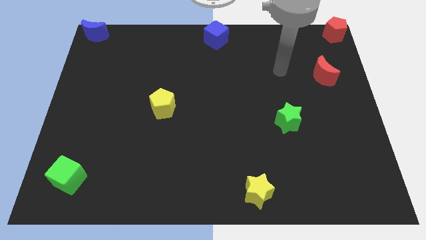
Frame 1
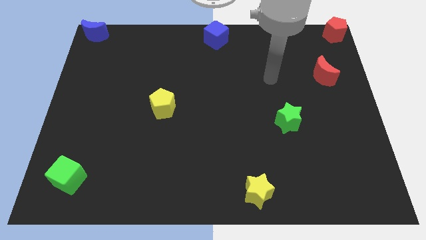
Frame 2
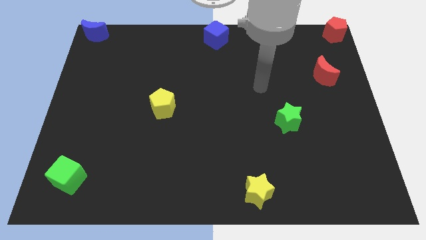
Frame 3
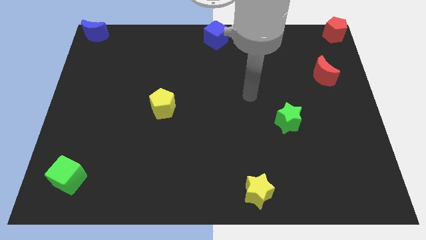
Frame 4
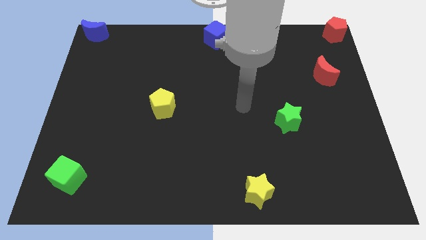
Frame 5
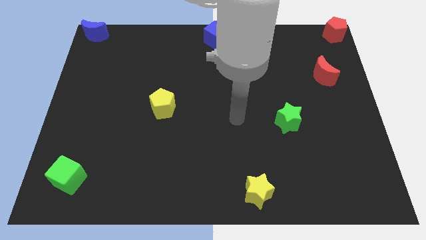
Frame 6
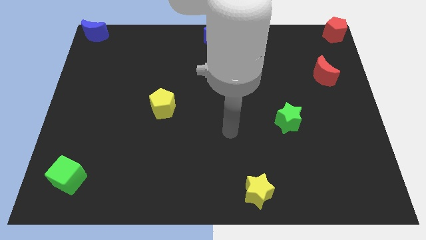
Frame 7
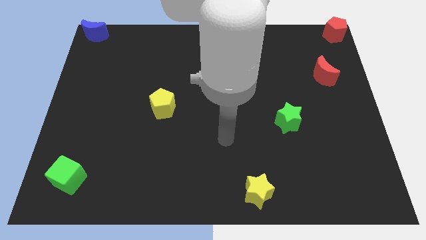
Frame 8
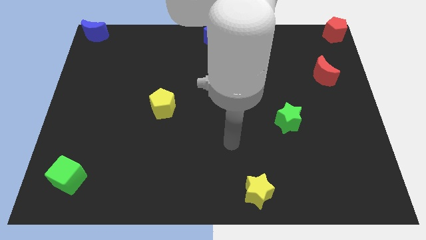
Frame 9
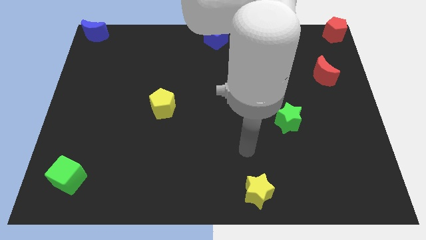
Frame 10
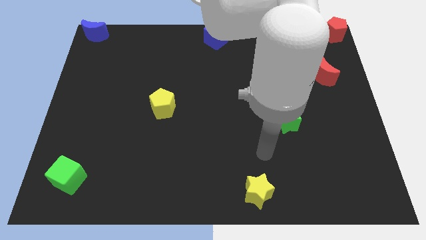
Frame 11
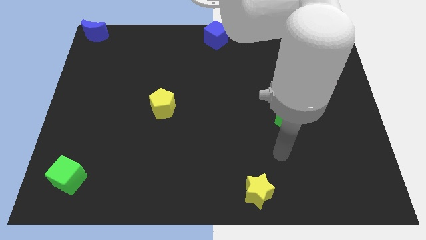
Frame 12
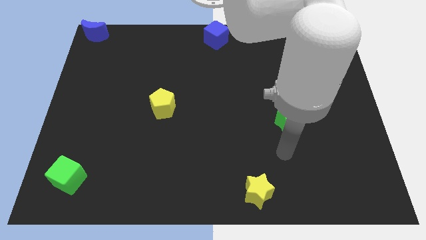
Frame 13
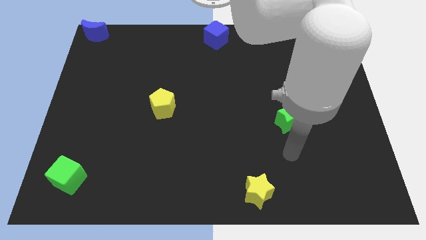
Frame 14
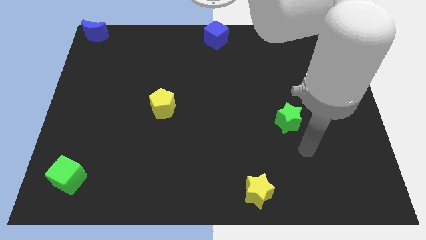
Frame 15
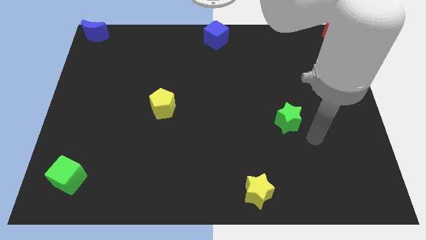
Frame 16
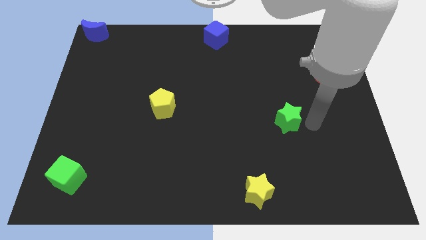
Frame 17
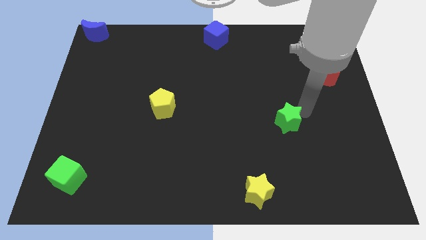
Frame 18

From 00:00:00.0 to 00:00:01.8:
point your arm at the right of the green star

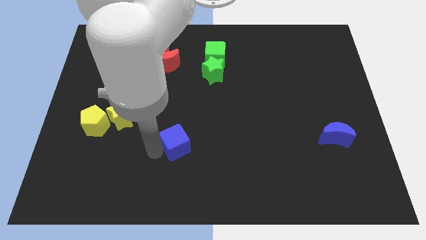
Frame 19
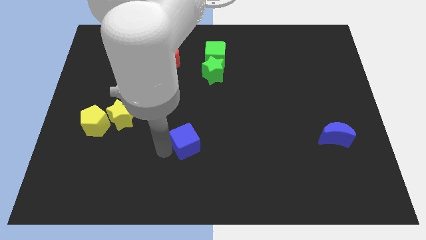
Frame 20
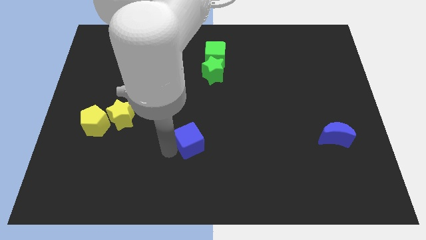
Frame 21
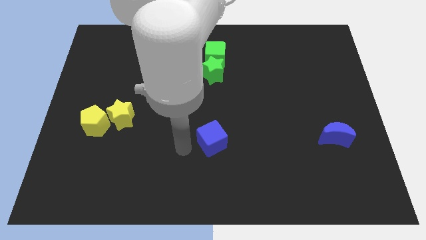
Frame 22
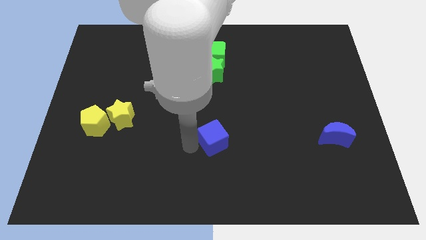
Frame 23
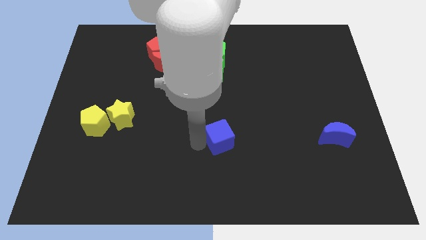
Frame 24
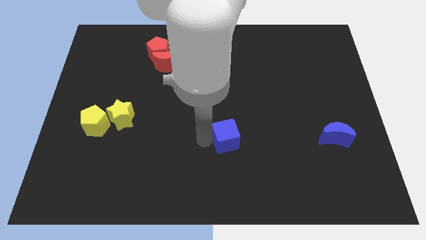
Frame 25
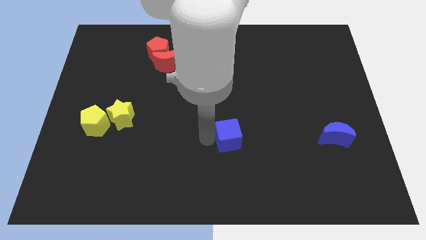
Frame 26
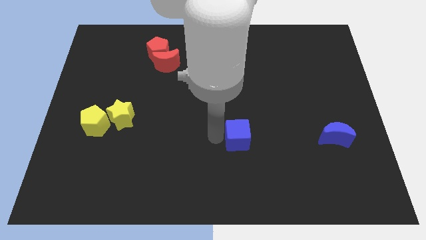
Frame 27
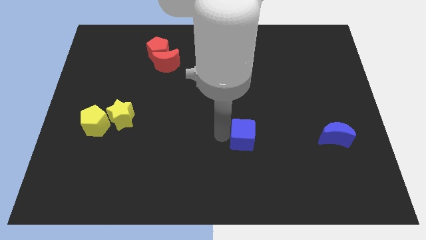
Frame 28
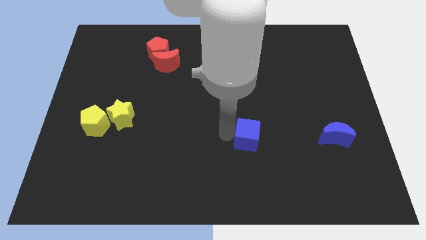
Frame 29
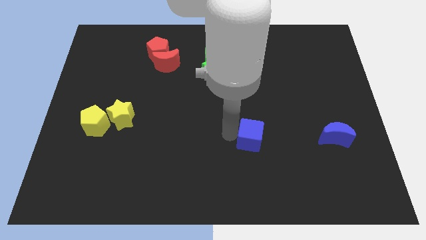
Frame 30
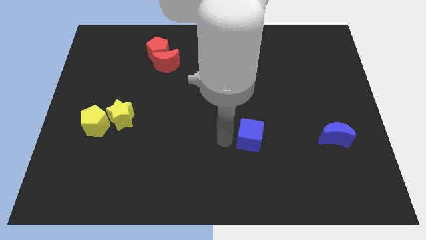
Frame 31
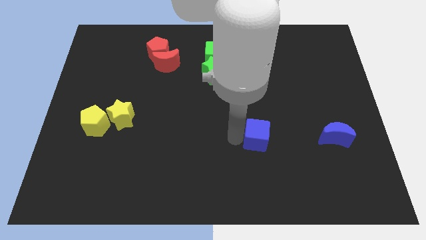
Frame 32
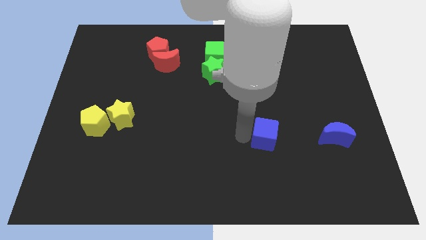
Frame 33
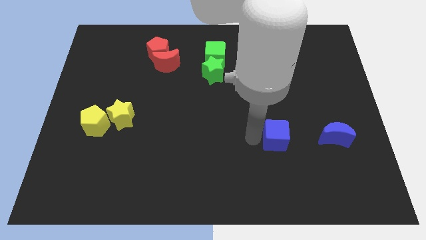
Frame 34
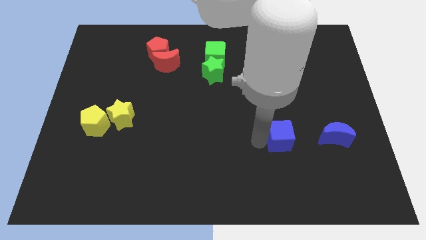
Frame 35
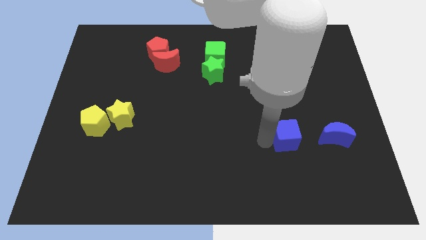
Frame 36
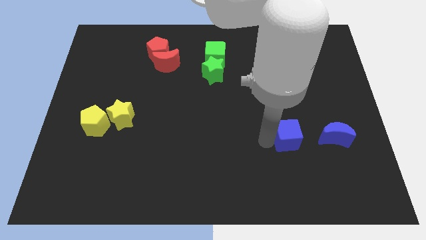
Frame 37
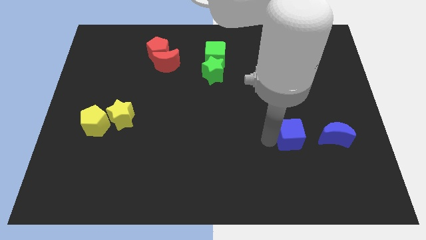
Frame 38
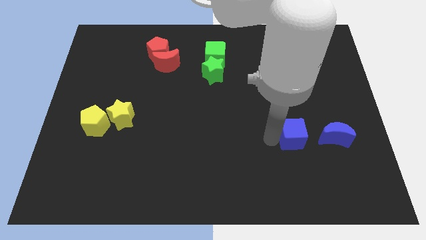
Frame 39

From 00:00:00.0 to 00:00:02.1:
move blue cube near to the blue moon

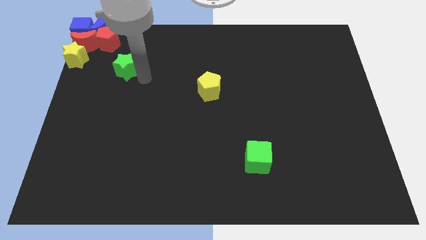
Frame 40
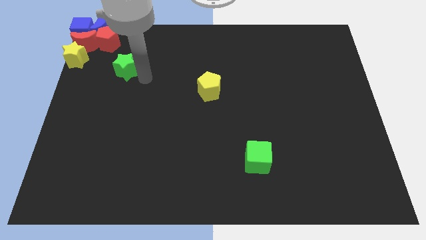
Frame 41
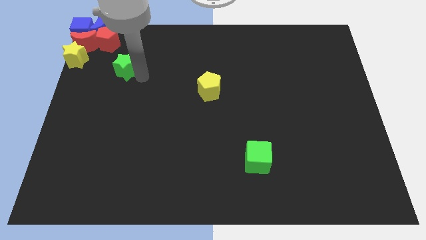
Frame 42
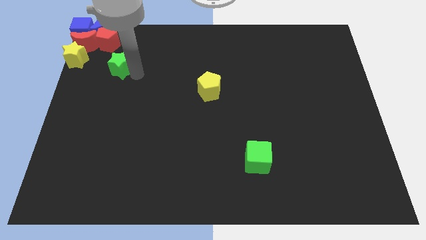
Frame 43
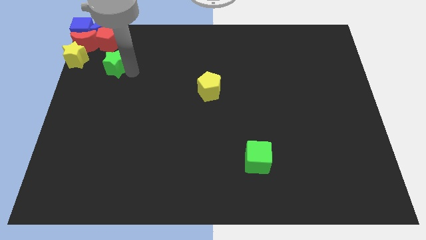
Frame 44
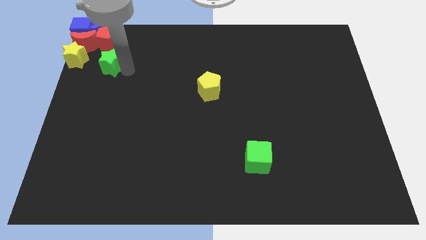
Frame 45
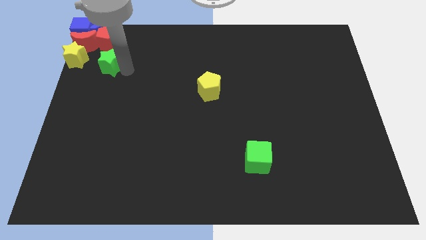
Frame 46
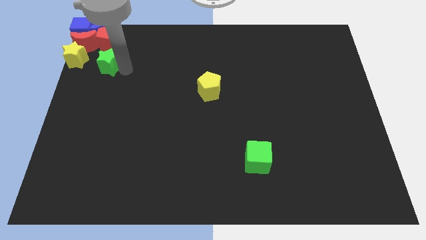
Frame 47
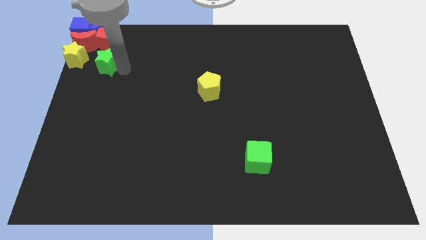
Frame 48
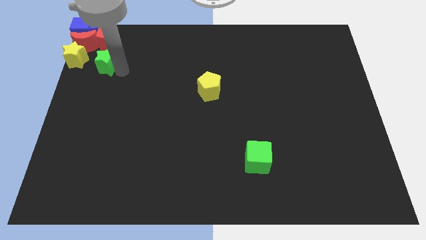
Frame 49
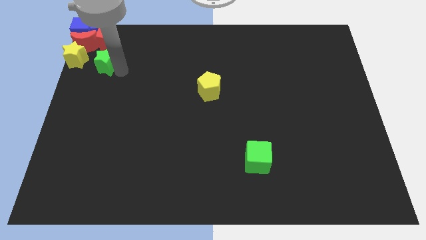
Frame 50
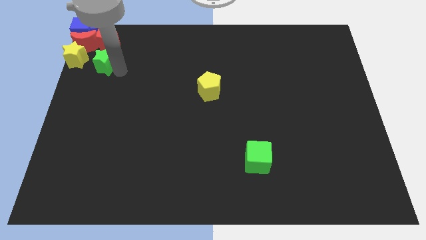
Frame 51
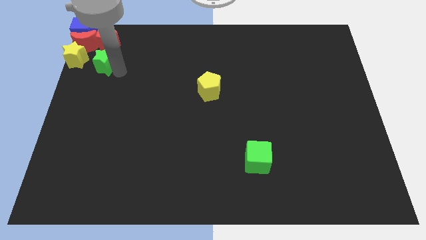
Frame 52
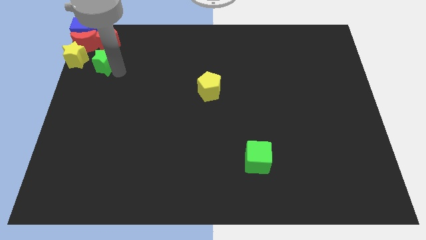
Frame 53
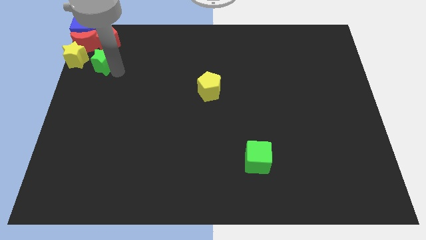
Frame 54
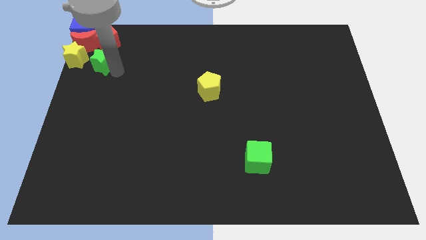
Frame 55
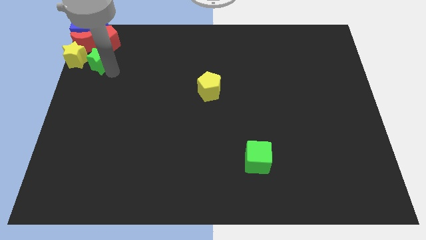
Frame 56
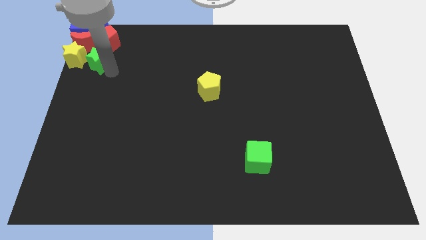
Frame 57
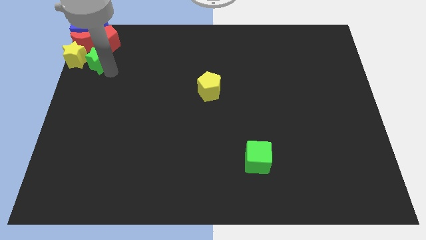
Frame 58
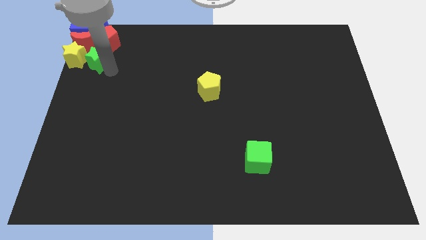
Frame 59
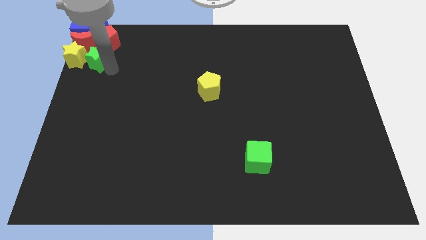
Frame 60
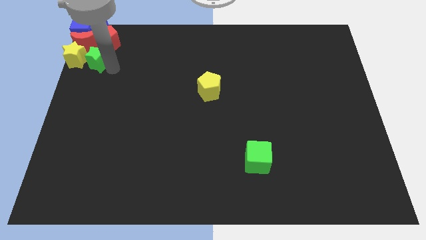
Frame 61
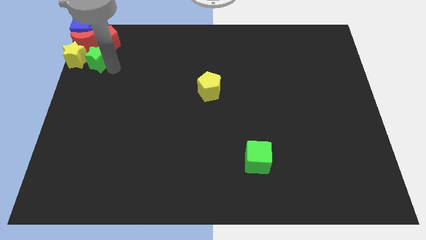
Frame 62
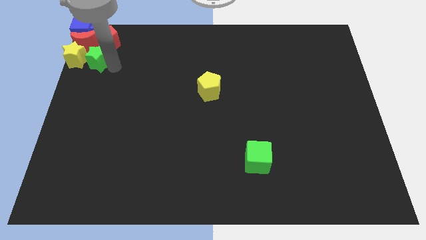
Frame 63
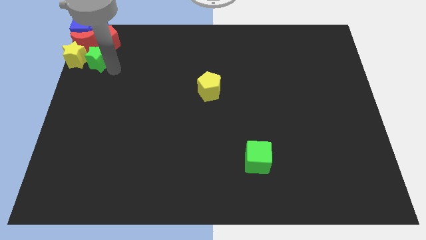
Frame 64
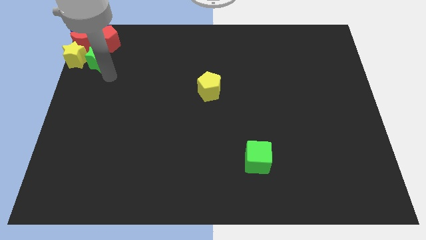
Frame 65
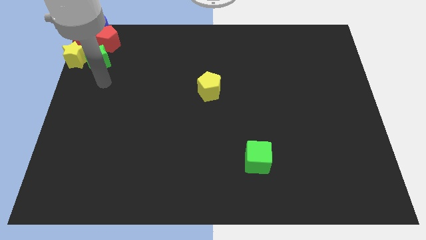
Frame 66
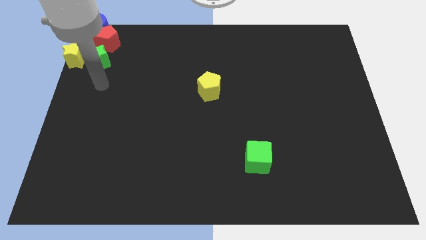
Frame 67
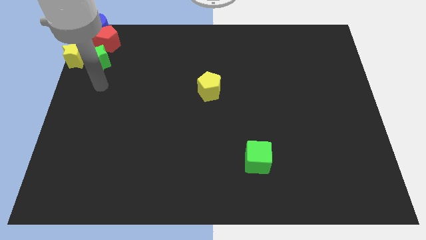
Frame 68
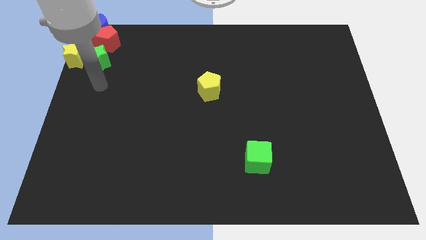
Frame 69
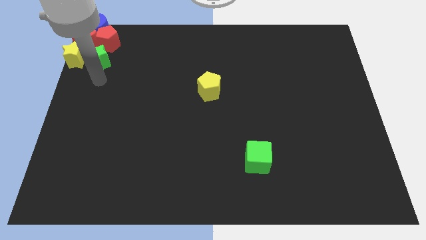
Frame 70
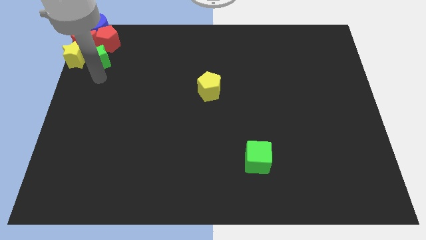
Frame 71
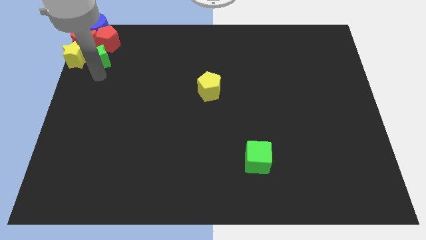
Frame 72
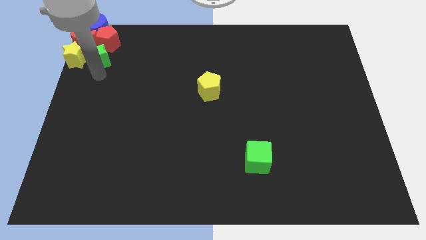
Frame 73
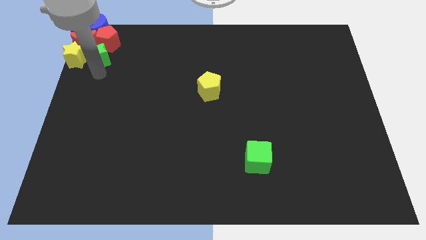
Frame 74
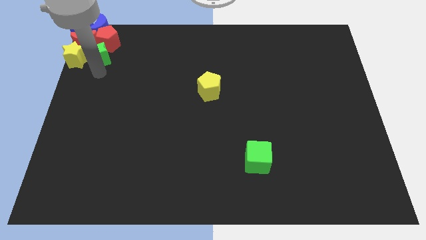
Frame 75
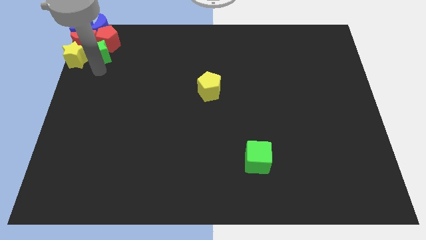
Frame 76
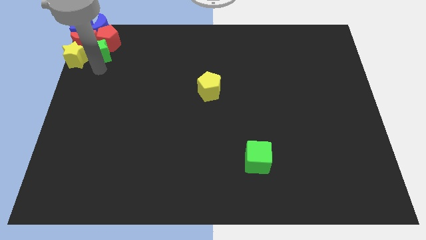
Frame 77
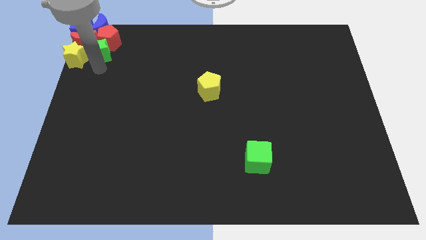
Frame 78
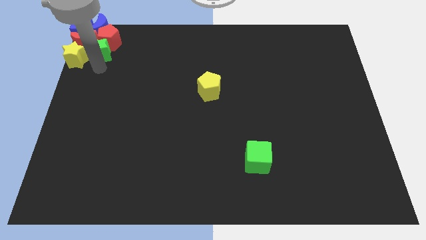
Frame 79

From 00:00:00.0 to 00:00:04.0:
push the green star into the group of red blocks

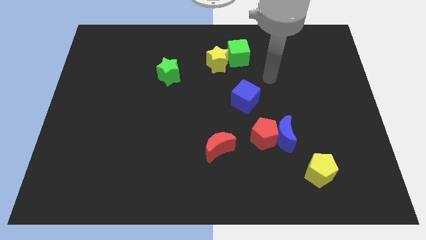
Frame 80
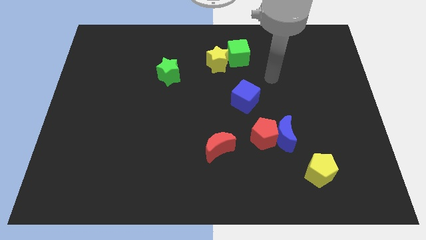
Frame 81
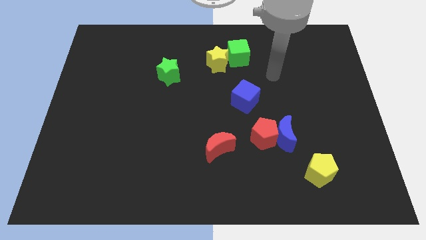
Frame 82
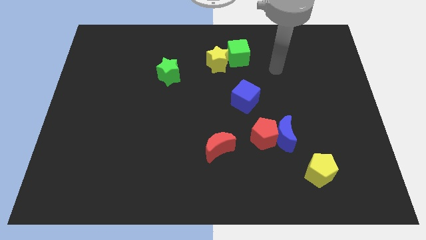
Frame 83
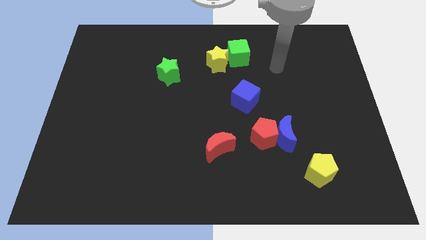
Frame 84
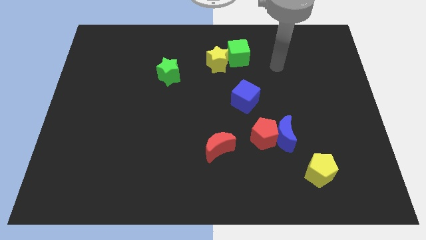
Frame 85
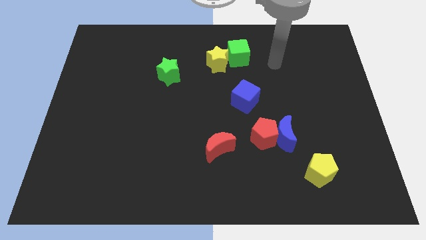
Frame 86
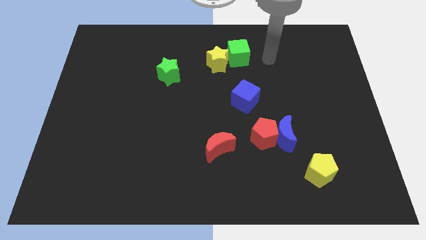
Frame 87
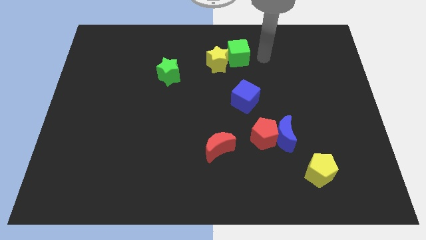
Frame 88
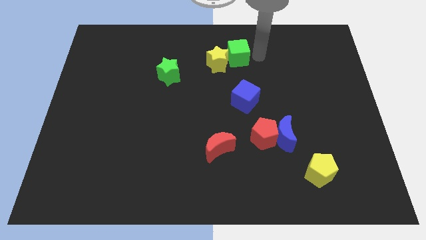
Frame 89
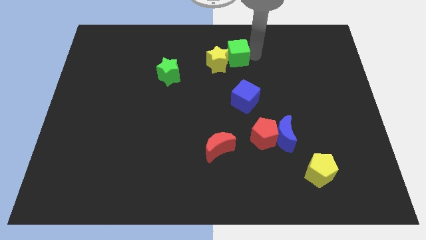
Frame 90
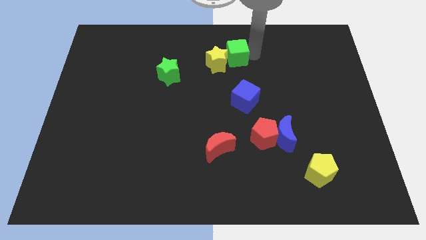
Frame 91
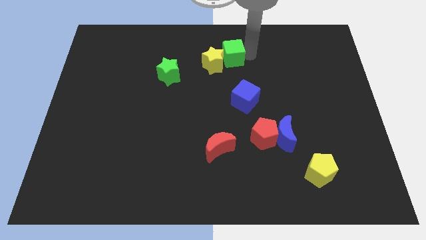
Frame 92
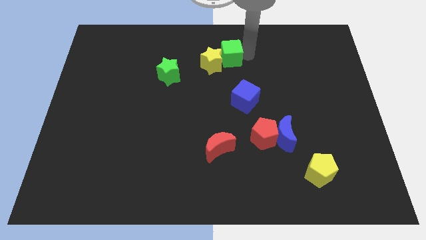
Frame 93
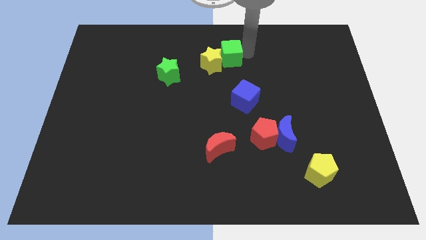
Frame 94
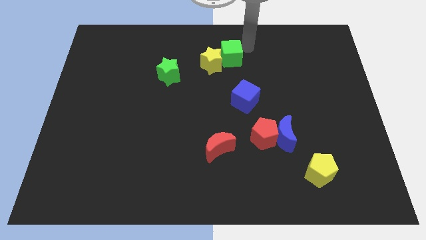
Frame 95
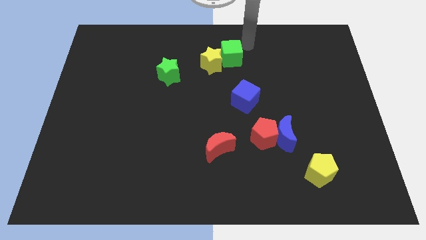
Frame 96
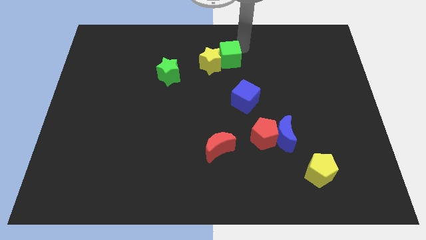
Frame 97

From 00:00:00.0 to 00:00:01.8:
move your arm to the right side of the green cube
